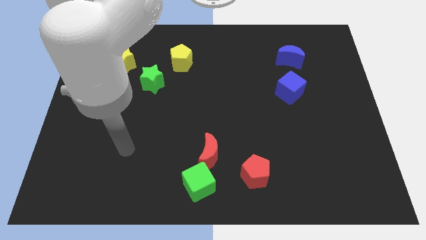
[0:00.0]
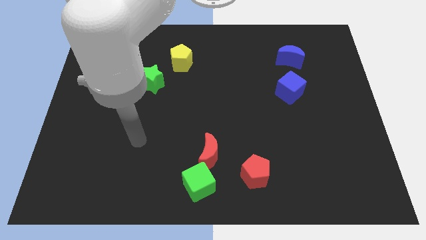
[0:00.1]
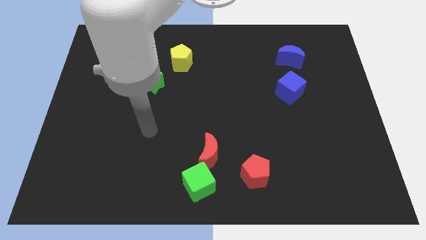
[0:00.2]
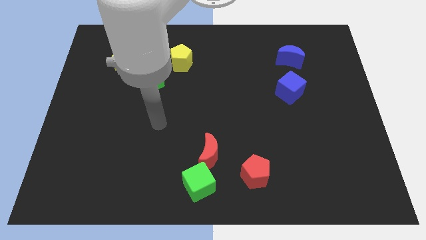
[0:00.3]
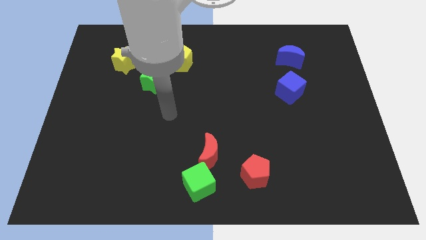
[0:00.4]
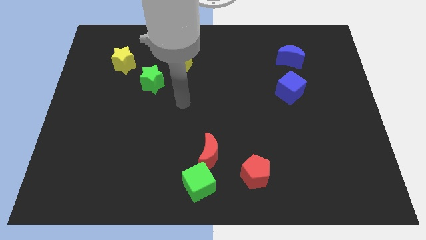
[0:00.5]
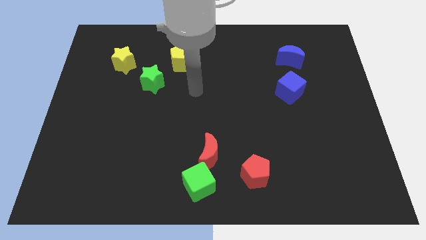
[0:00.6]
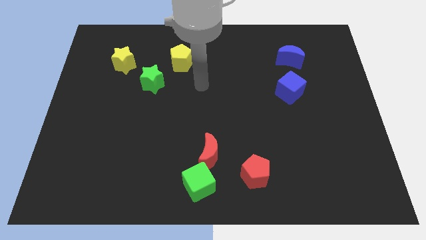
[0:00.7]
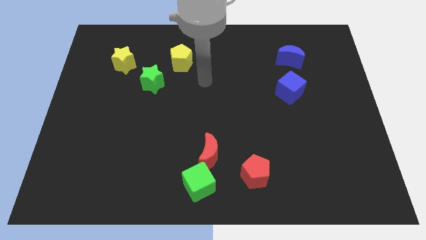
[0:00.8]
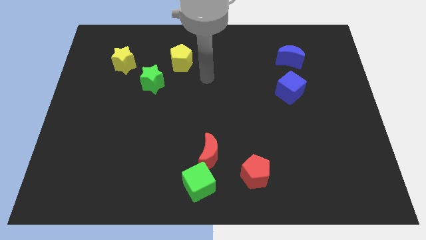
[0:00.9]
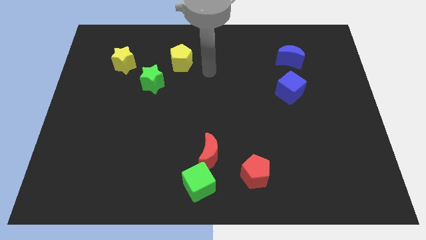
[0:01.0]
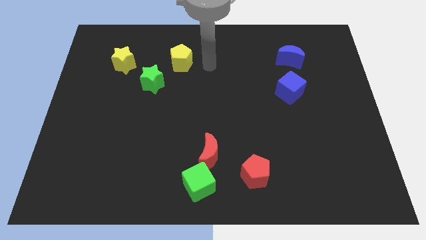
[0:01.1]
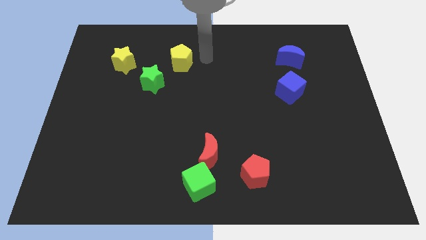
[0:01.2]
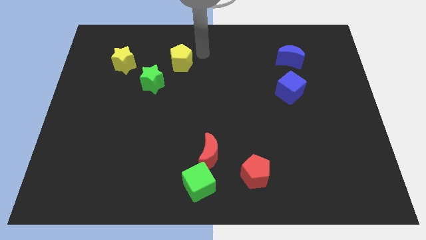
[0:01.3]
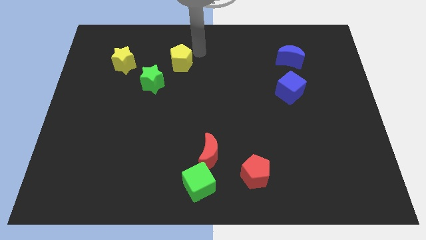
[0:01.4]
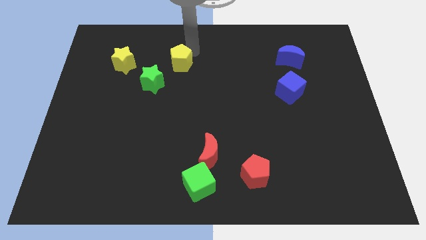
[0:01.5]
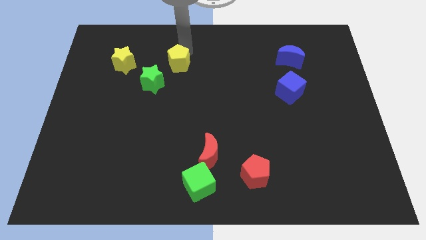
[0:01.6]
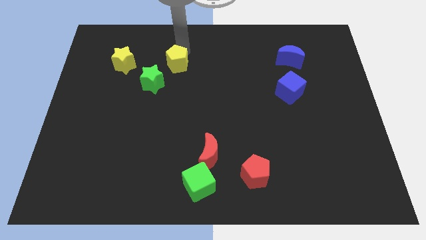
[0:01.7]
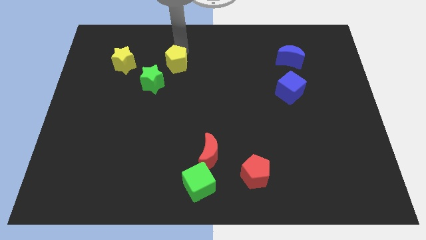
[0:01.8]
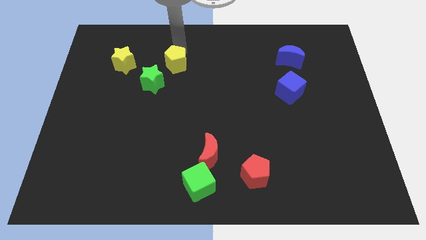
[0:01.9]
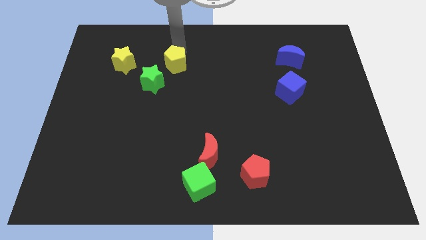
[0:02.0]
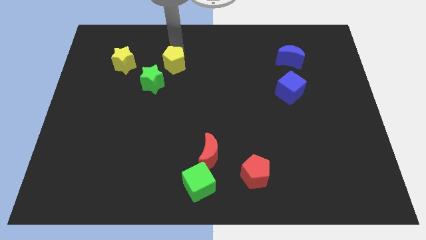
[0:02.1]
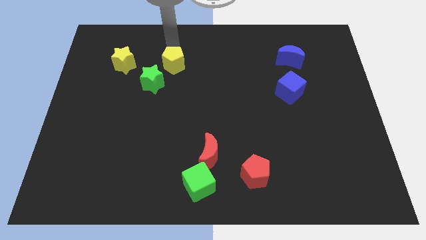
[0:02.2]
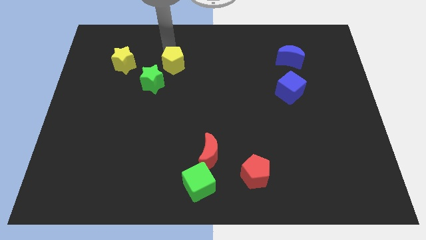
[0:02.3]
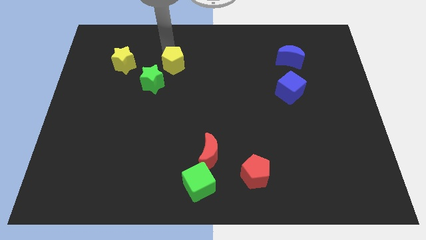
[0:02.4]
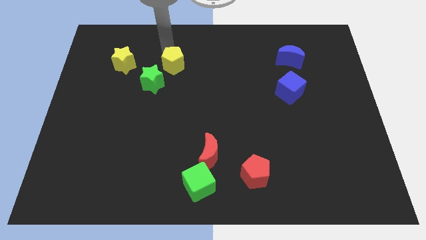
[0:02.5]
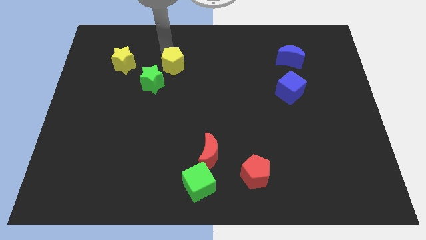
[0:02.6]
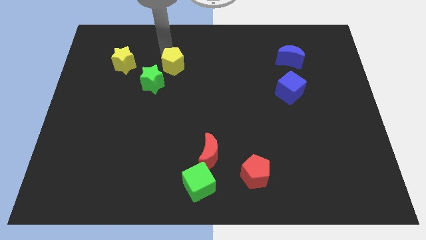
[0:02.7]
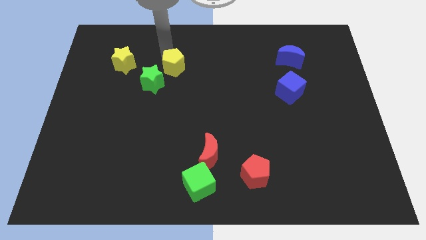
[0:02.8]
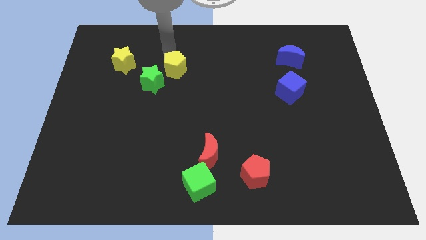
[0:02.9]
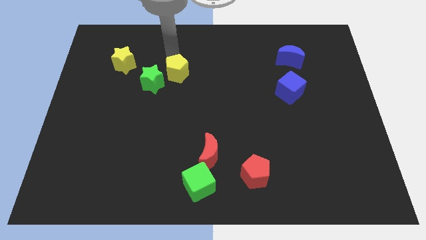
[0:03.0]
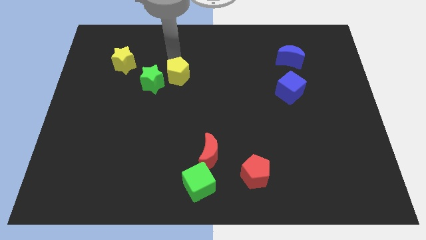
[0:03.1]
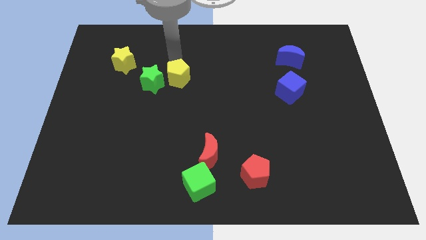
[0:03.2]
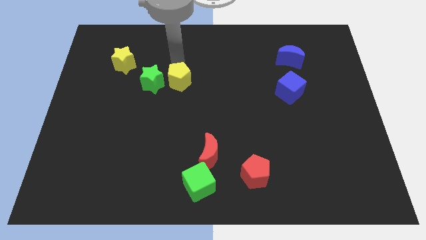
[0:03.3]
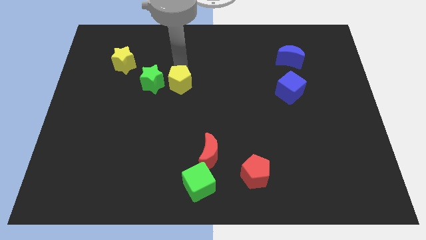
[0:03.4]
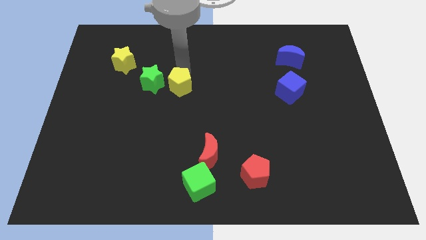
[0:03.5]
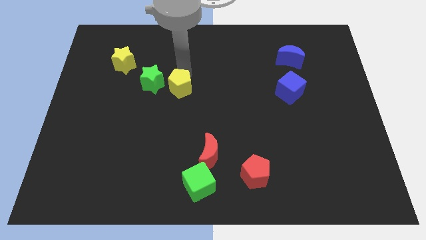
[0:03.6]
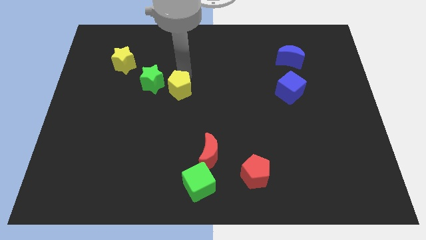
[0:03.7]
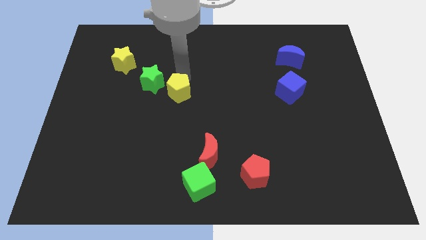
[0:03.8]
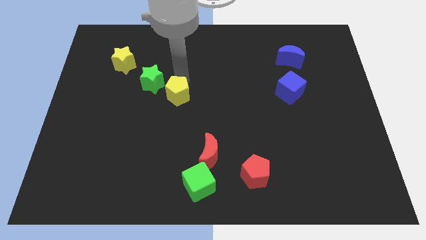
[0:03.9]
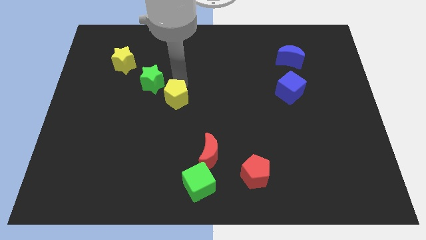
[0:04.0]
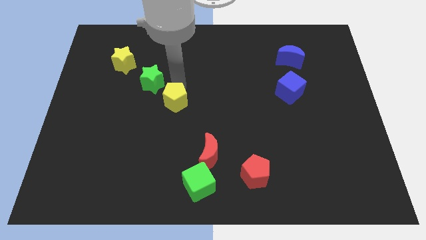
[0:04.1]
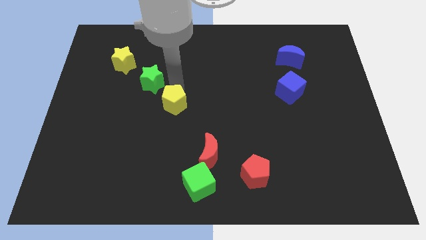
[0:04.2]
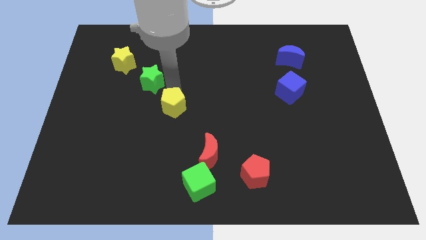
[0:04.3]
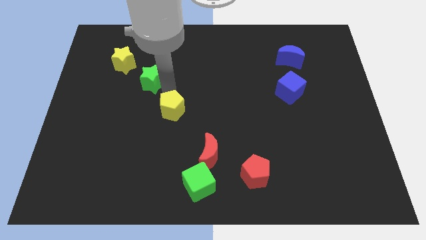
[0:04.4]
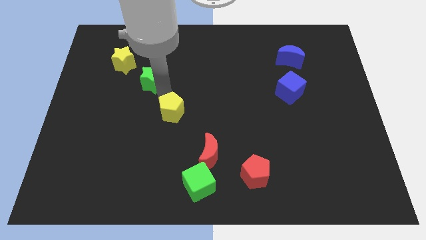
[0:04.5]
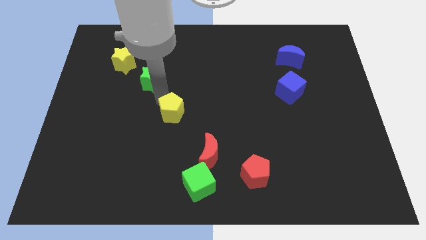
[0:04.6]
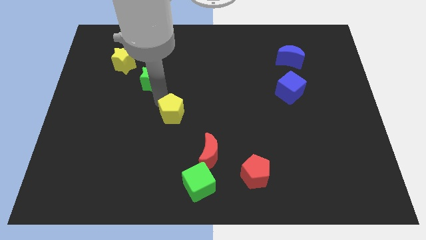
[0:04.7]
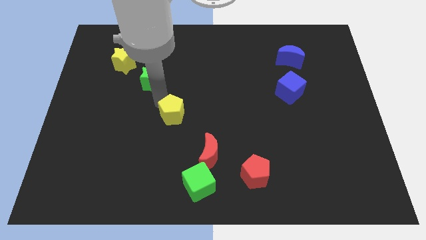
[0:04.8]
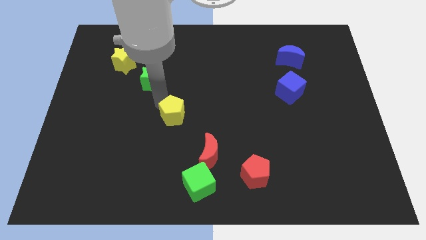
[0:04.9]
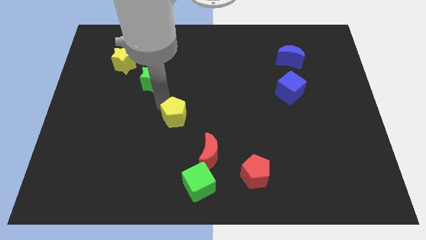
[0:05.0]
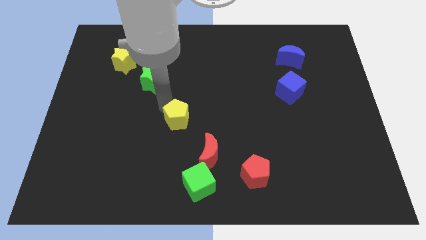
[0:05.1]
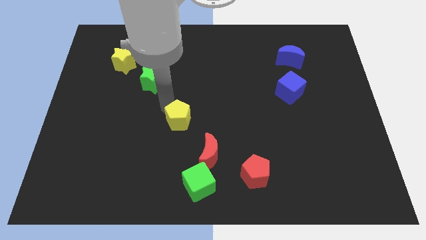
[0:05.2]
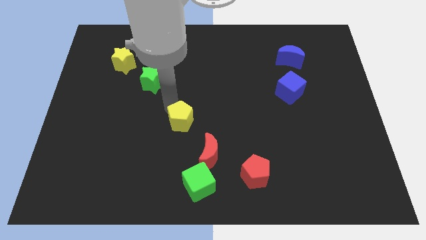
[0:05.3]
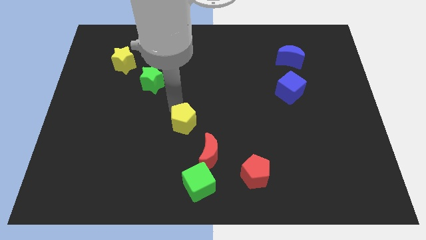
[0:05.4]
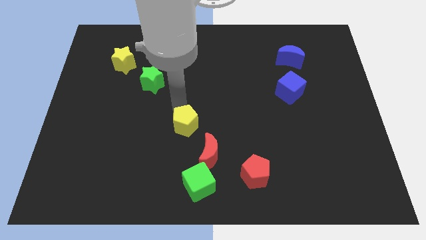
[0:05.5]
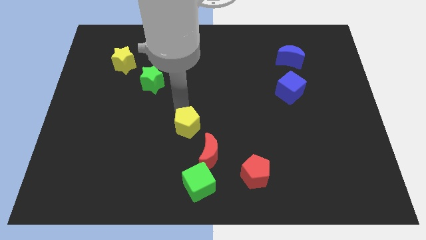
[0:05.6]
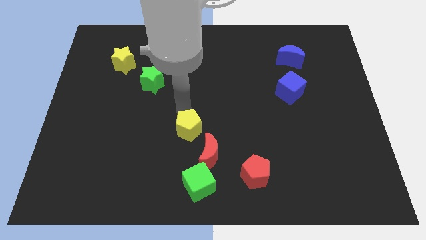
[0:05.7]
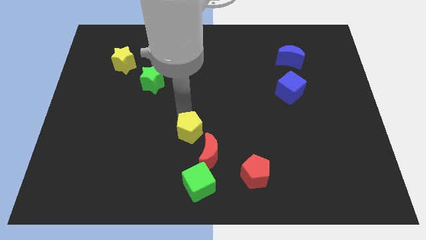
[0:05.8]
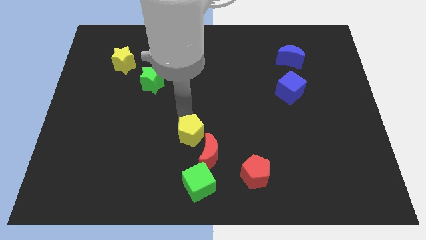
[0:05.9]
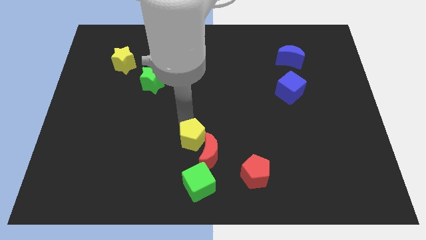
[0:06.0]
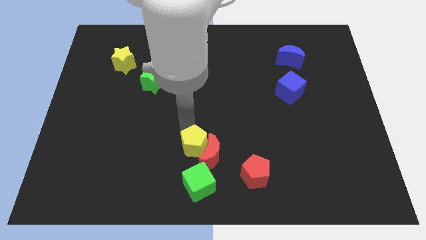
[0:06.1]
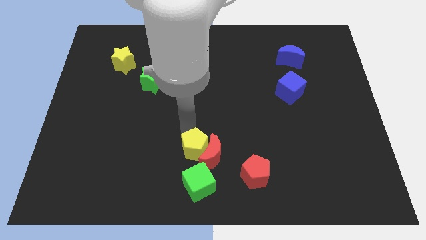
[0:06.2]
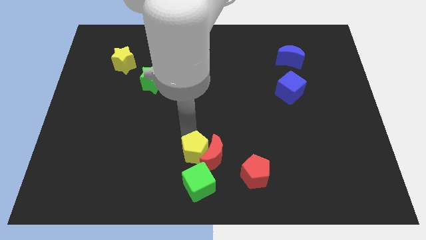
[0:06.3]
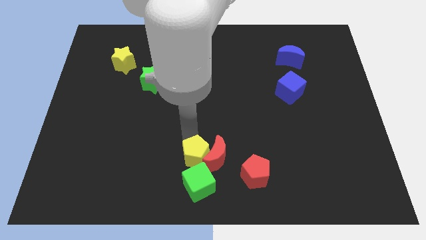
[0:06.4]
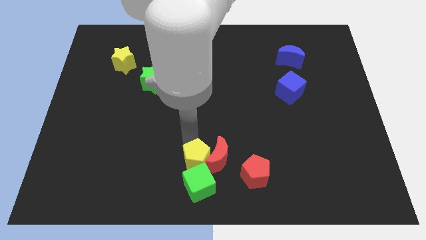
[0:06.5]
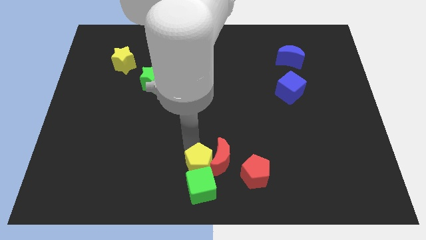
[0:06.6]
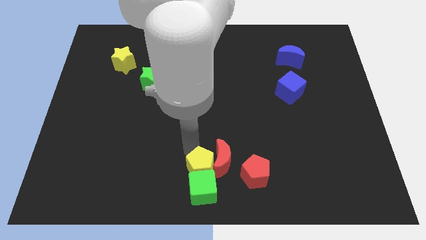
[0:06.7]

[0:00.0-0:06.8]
slide the yellow pentagon to the green cube

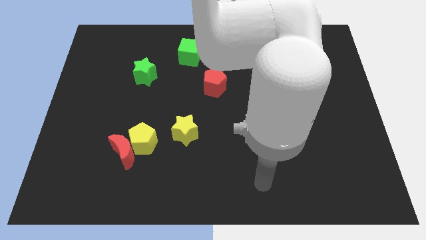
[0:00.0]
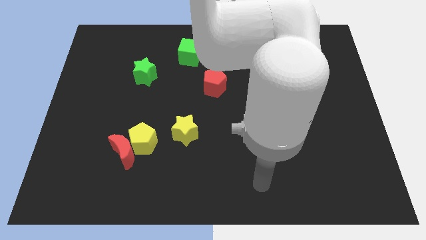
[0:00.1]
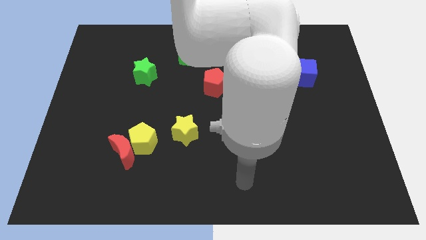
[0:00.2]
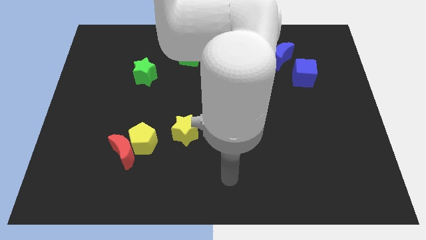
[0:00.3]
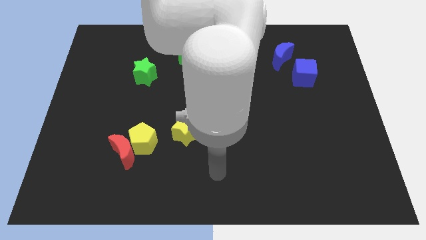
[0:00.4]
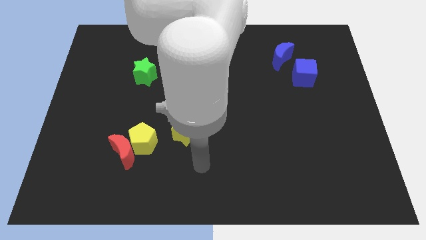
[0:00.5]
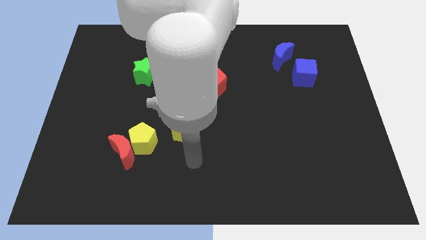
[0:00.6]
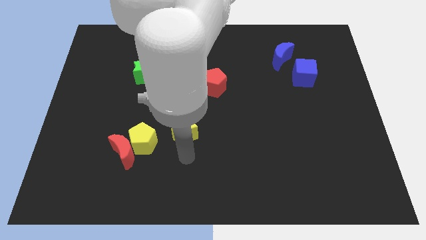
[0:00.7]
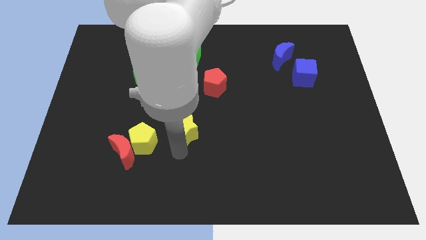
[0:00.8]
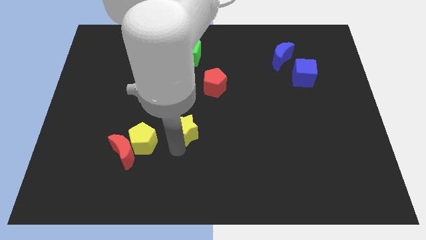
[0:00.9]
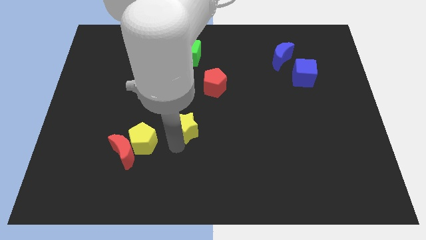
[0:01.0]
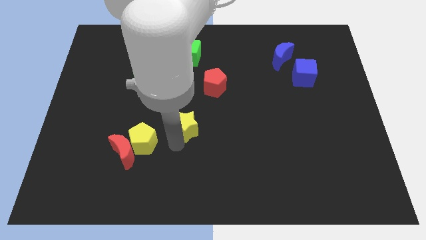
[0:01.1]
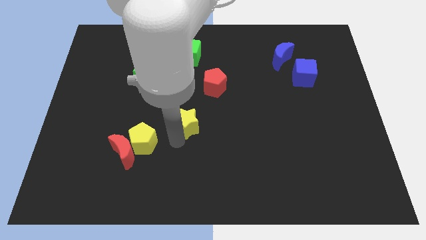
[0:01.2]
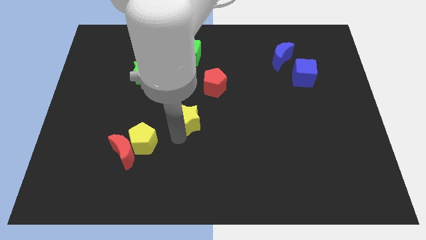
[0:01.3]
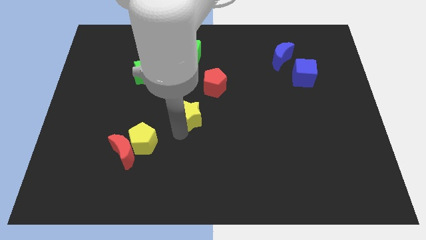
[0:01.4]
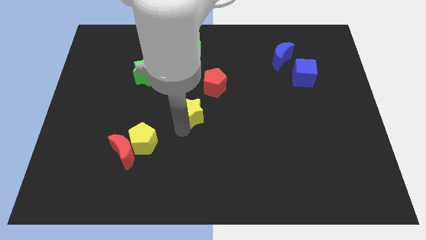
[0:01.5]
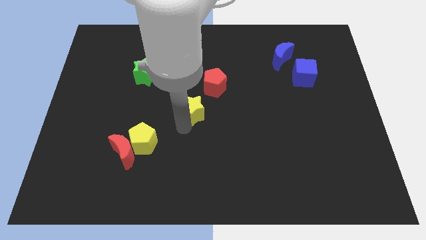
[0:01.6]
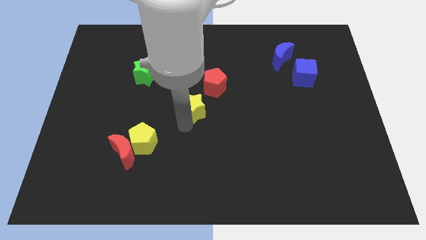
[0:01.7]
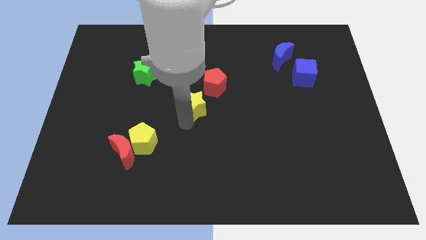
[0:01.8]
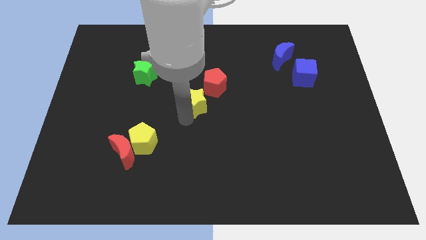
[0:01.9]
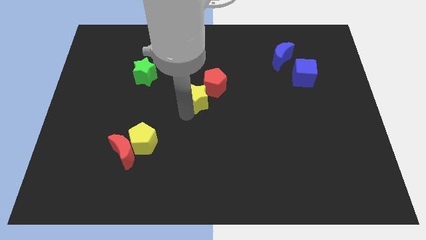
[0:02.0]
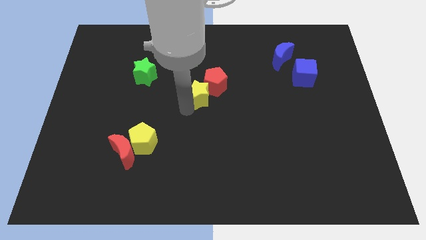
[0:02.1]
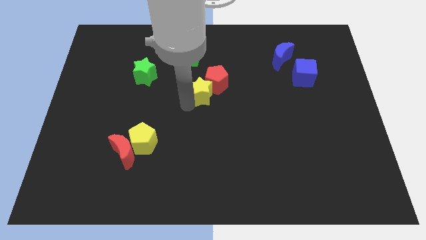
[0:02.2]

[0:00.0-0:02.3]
put the yellow star towards the red pentagon
